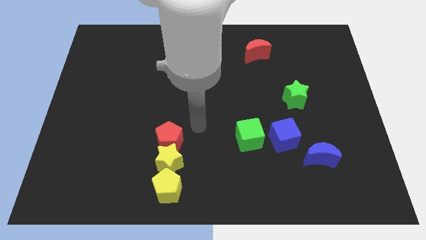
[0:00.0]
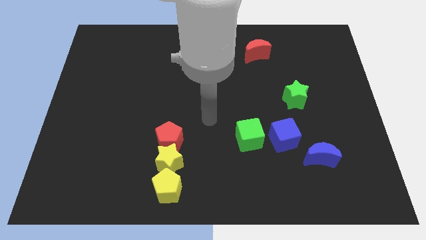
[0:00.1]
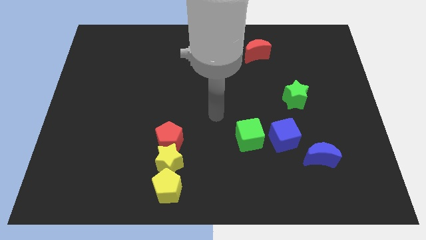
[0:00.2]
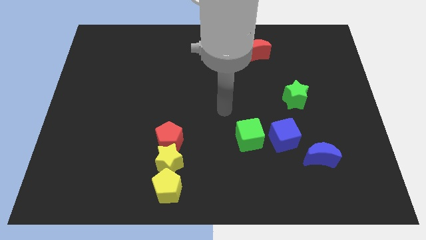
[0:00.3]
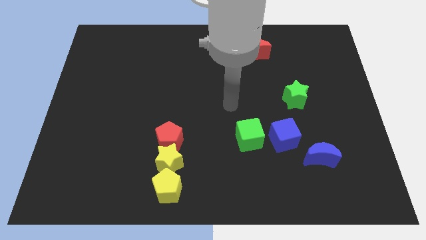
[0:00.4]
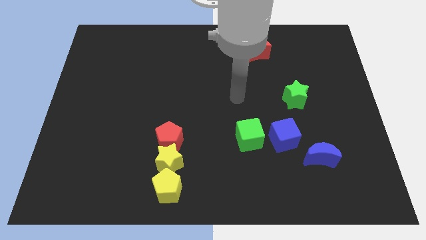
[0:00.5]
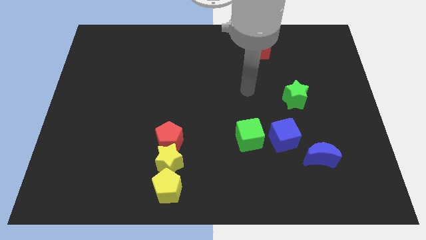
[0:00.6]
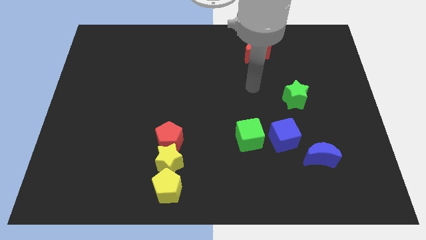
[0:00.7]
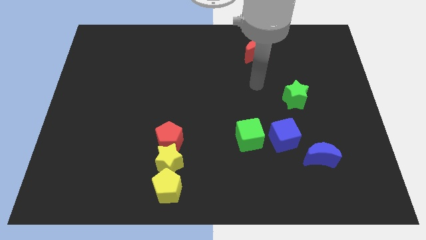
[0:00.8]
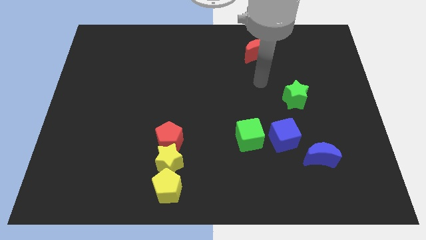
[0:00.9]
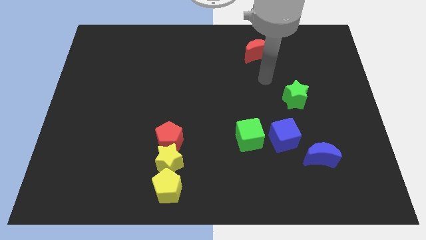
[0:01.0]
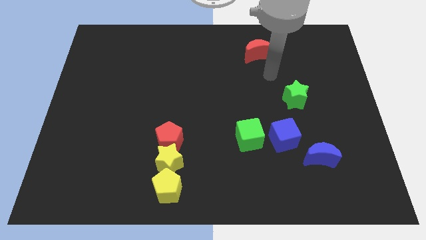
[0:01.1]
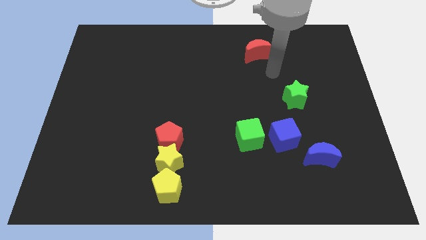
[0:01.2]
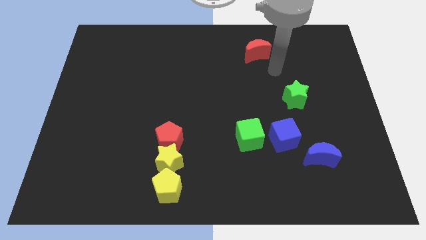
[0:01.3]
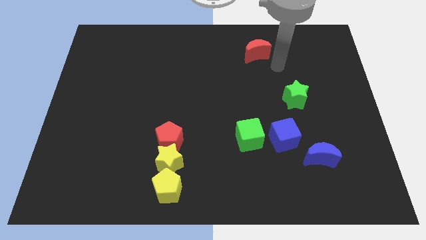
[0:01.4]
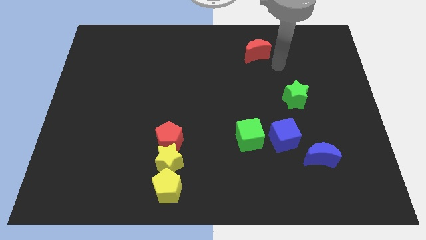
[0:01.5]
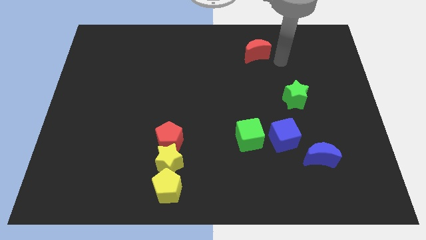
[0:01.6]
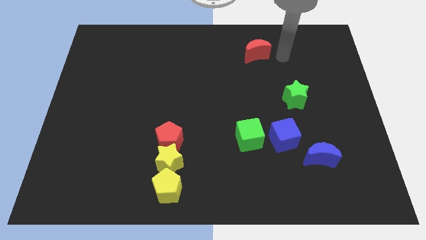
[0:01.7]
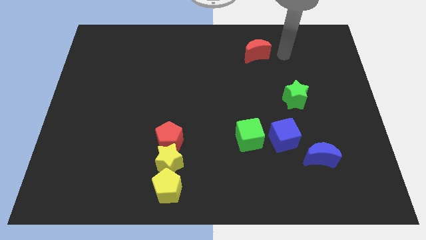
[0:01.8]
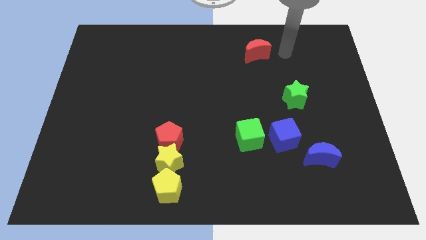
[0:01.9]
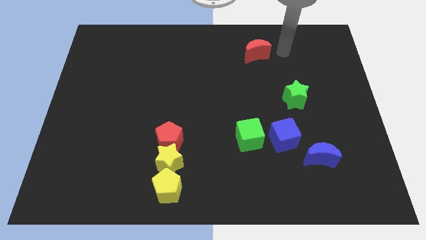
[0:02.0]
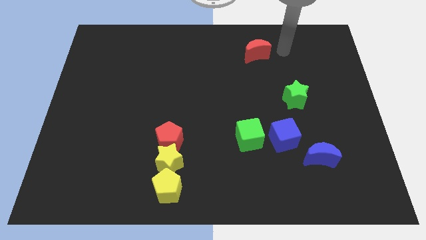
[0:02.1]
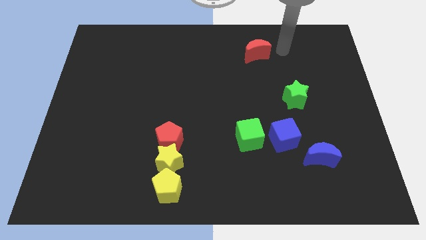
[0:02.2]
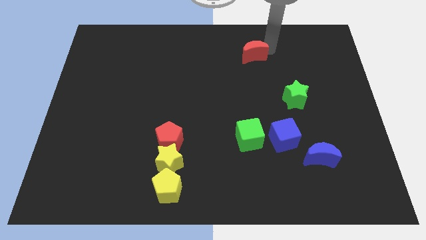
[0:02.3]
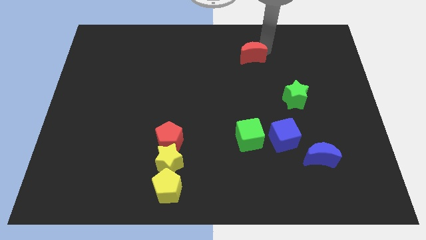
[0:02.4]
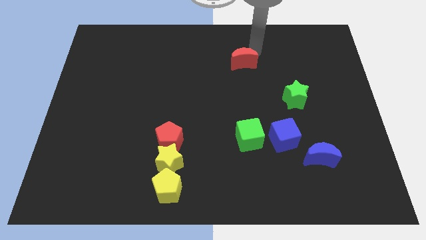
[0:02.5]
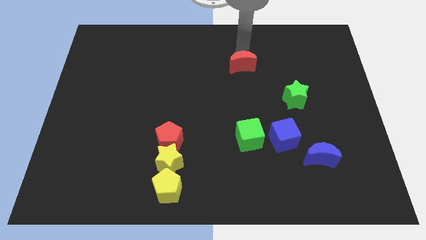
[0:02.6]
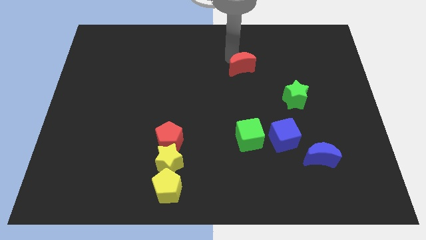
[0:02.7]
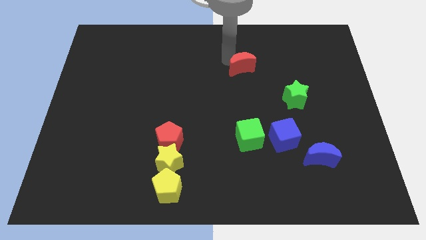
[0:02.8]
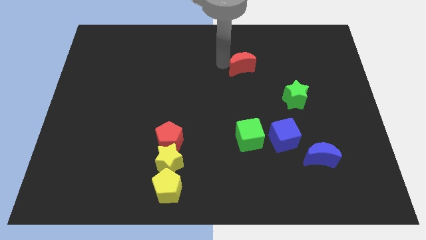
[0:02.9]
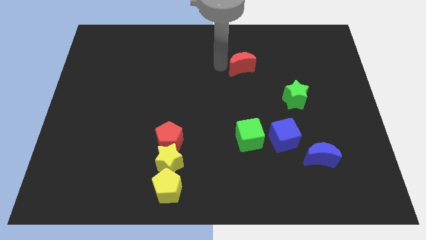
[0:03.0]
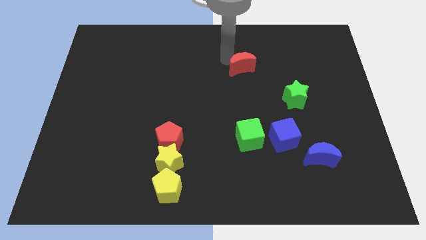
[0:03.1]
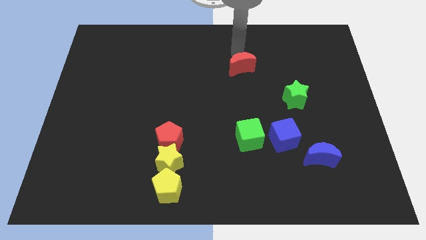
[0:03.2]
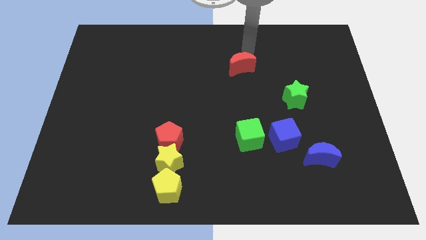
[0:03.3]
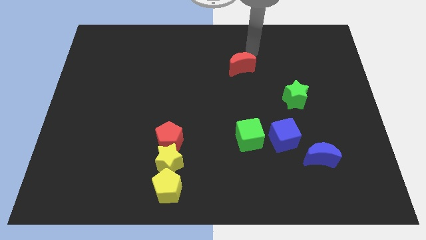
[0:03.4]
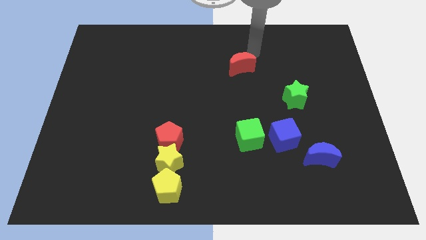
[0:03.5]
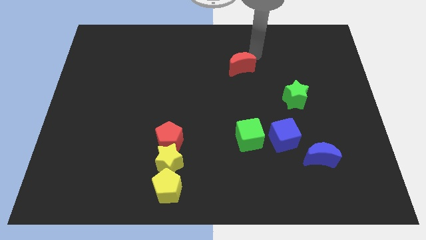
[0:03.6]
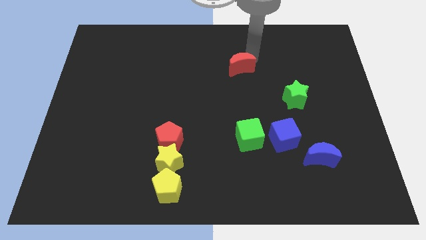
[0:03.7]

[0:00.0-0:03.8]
place the red moon above the green cube

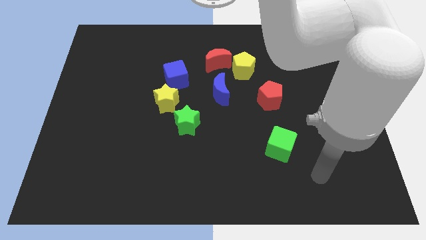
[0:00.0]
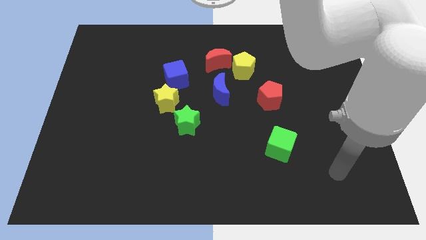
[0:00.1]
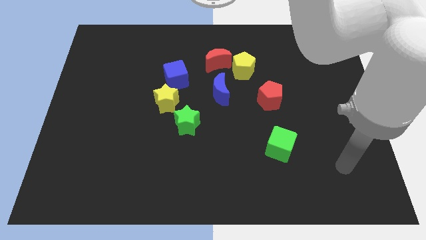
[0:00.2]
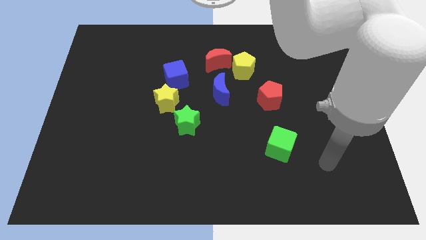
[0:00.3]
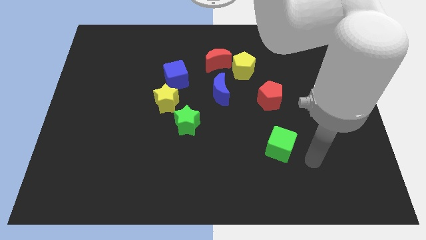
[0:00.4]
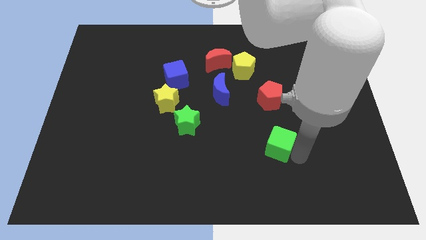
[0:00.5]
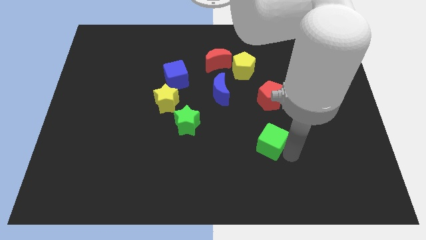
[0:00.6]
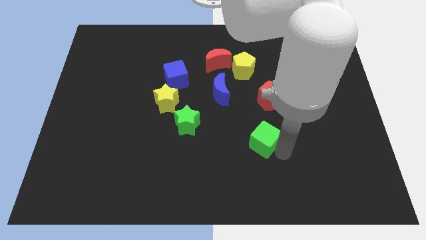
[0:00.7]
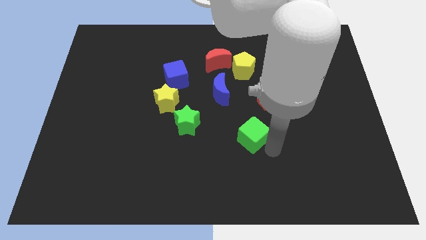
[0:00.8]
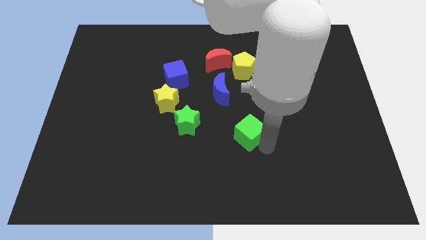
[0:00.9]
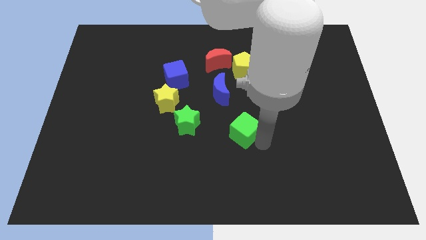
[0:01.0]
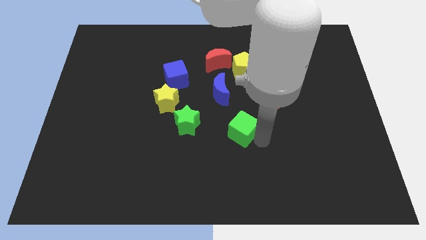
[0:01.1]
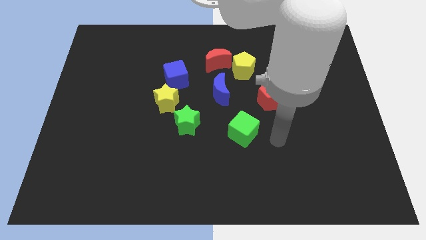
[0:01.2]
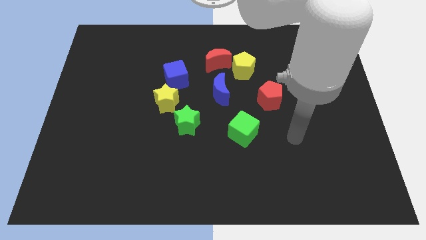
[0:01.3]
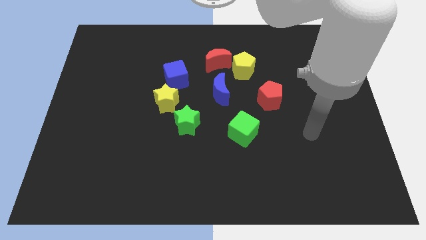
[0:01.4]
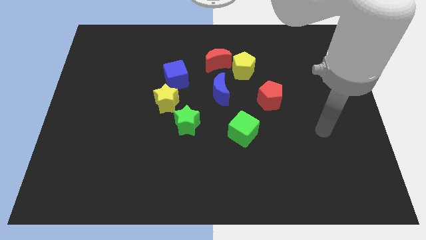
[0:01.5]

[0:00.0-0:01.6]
move the green cube towards the center of the board

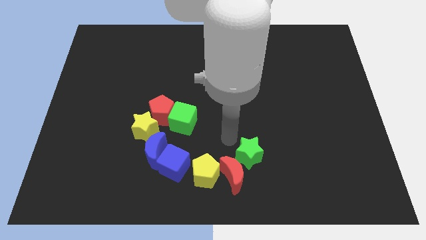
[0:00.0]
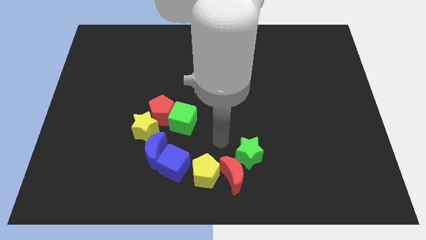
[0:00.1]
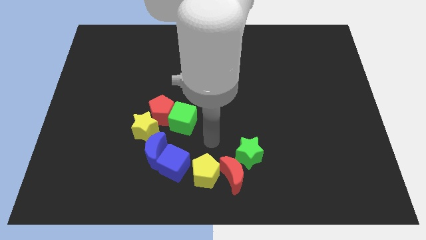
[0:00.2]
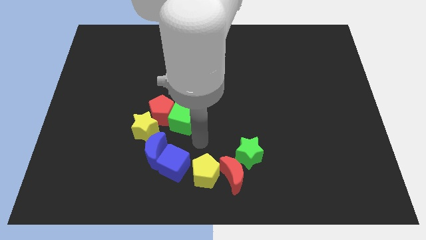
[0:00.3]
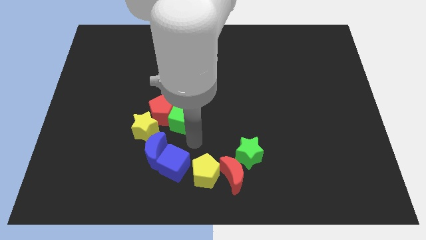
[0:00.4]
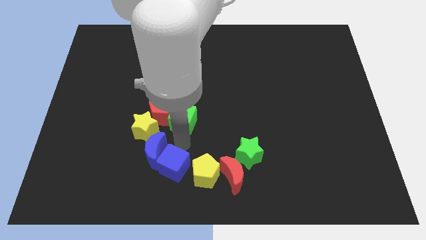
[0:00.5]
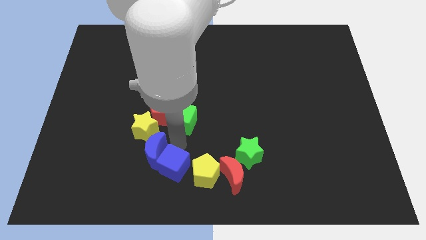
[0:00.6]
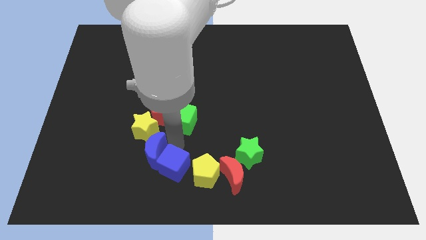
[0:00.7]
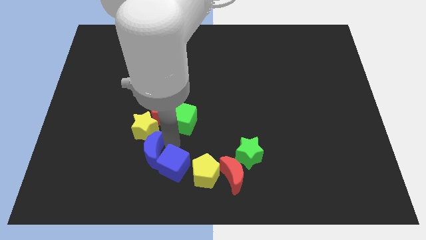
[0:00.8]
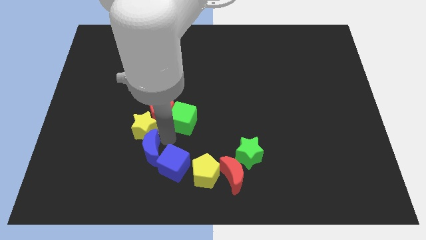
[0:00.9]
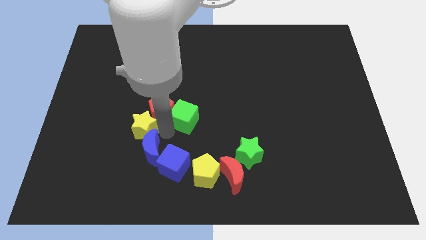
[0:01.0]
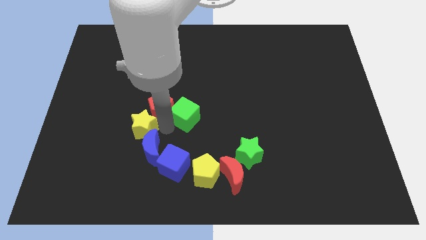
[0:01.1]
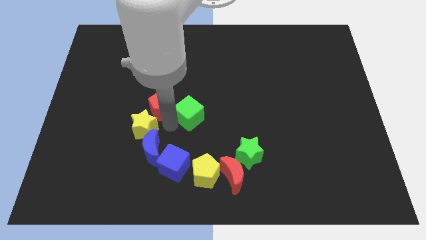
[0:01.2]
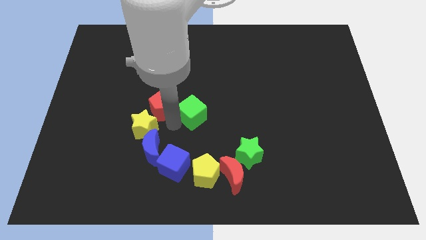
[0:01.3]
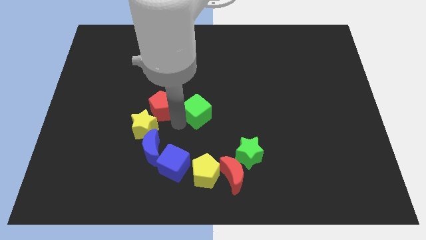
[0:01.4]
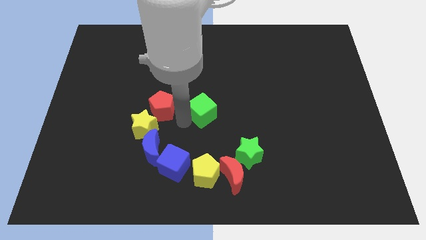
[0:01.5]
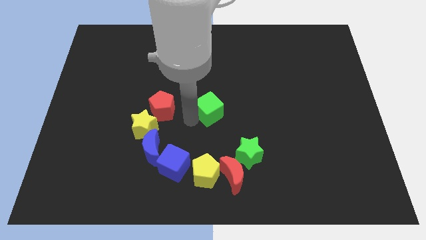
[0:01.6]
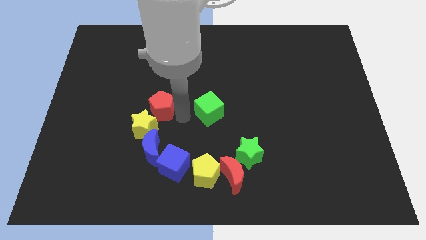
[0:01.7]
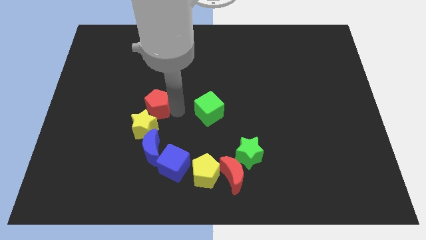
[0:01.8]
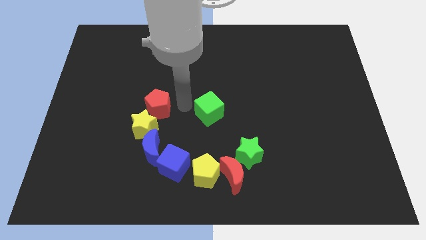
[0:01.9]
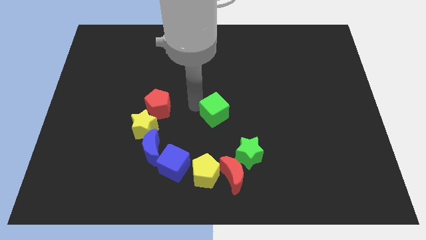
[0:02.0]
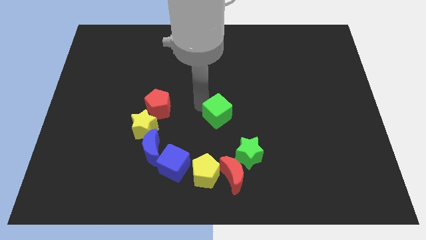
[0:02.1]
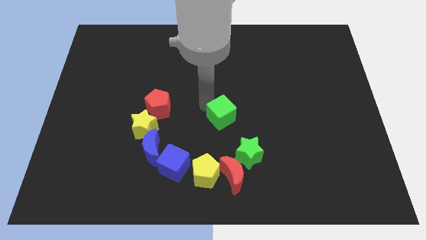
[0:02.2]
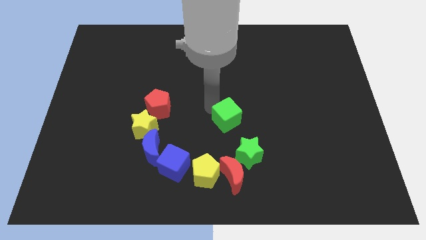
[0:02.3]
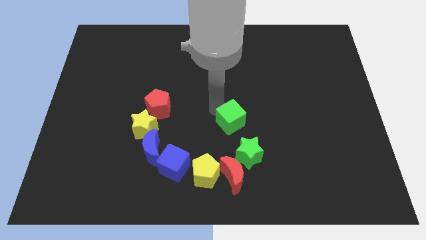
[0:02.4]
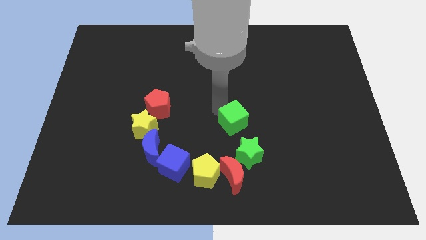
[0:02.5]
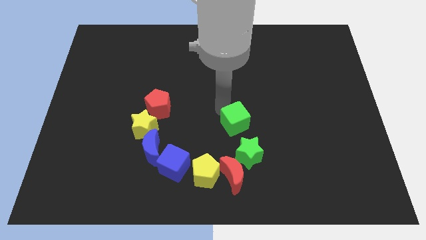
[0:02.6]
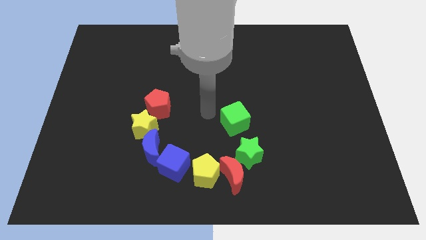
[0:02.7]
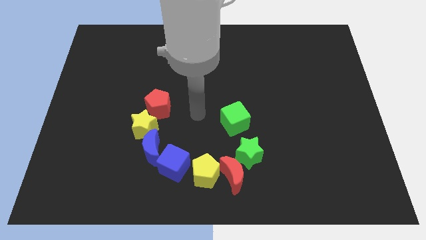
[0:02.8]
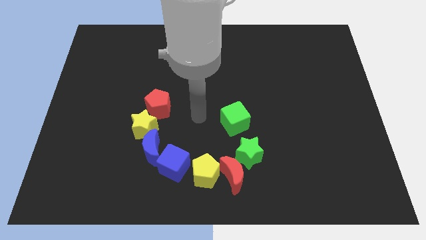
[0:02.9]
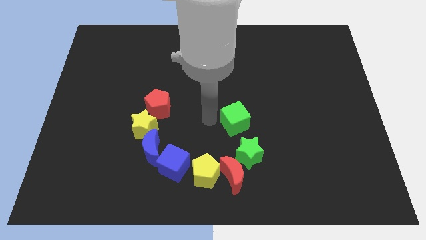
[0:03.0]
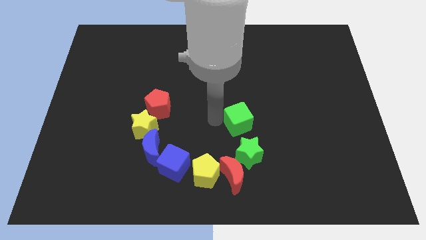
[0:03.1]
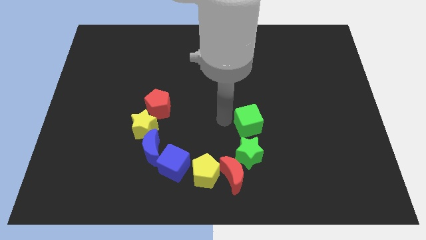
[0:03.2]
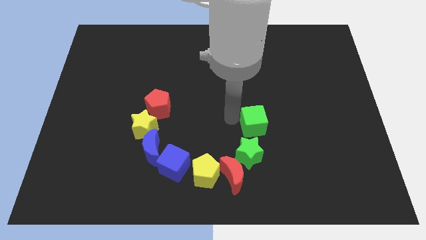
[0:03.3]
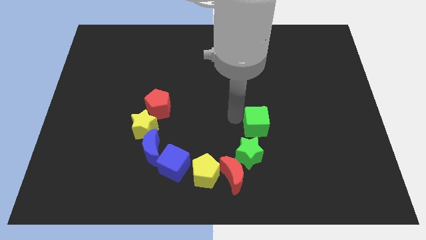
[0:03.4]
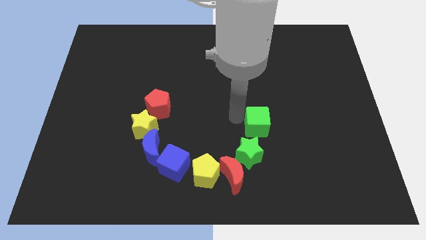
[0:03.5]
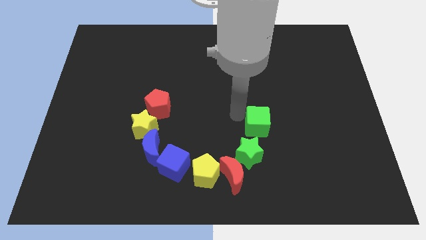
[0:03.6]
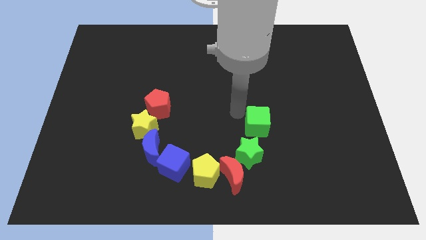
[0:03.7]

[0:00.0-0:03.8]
move the green cube to the top side of the green star
